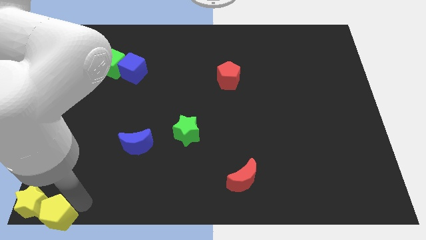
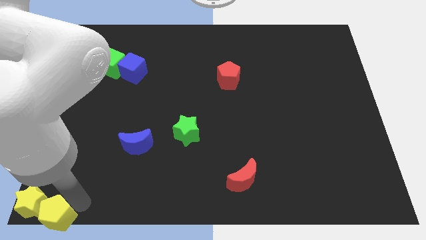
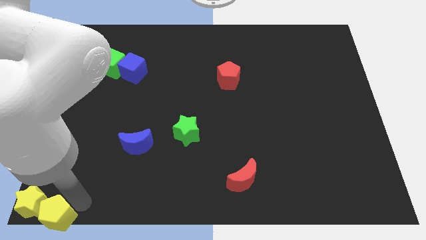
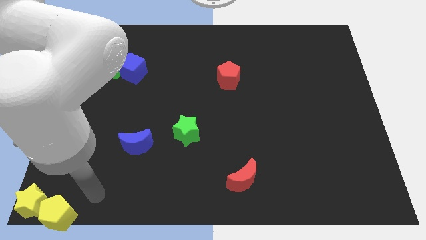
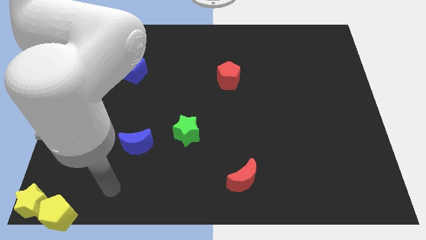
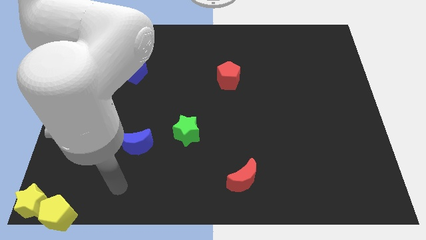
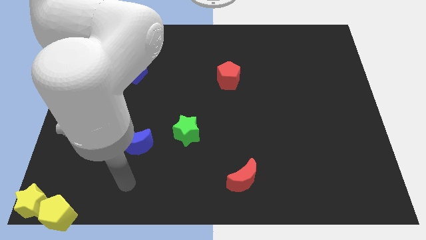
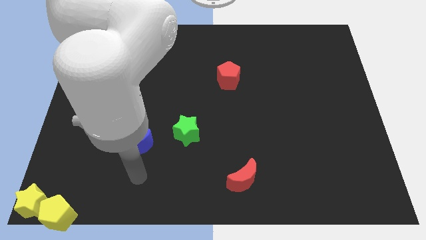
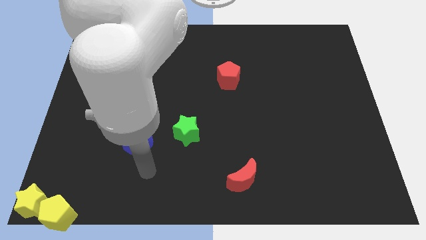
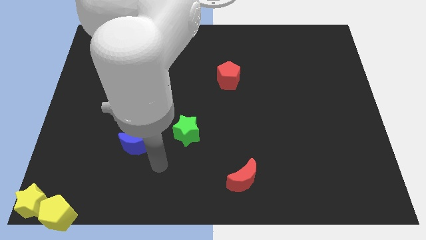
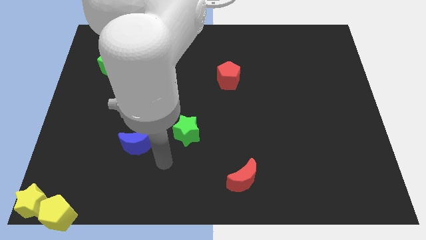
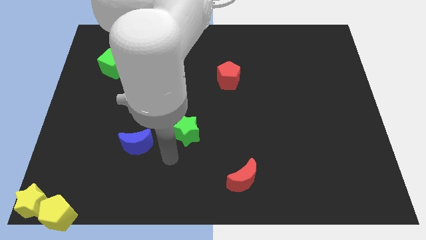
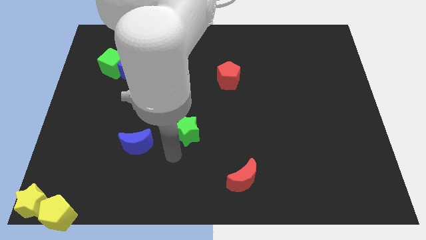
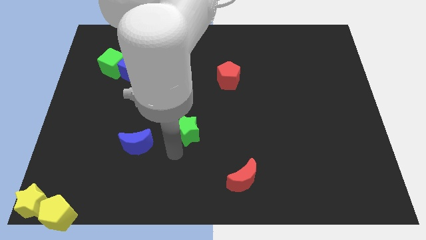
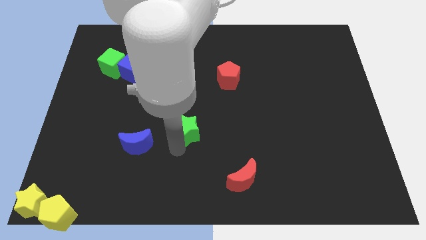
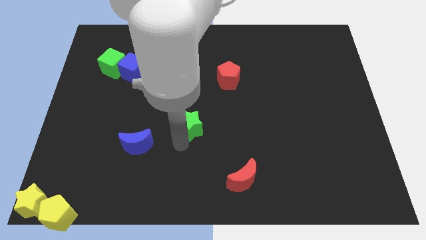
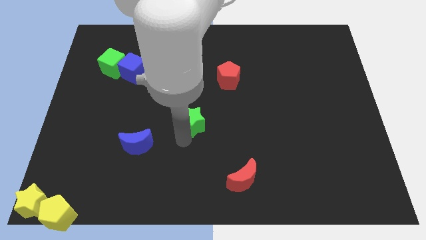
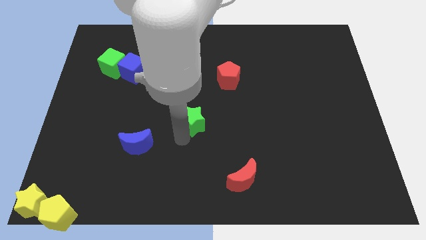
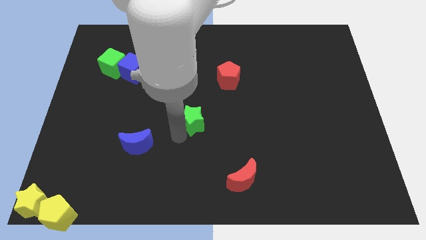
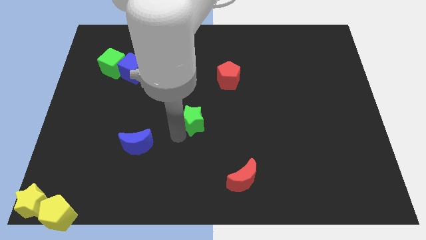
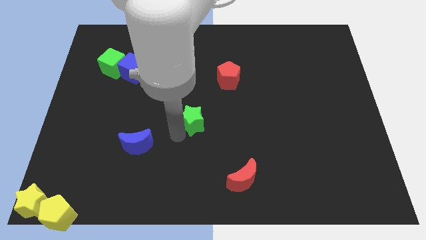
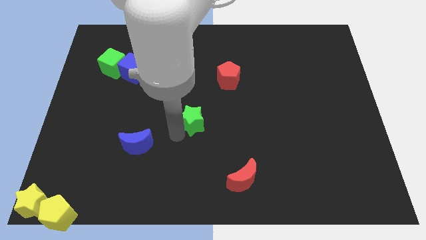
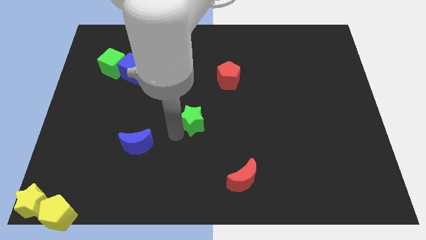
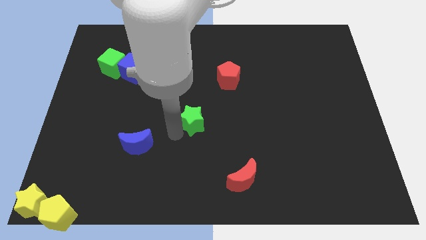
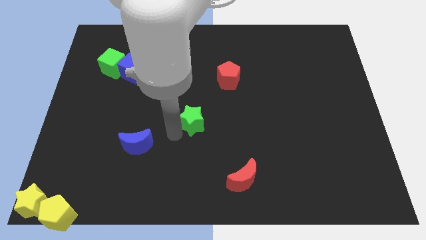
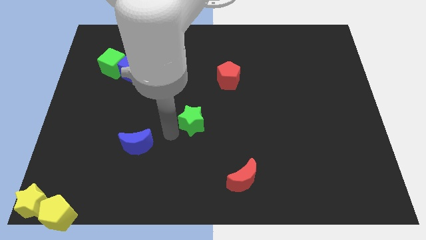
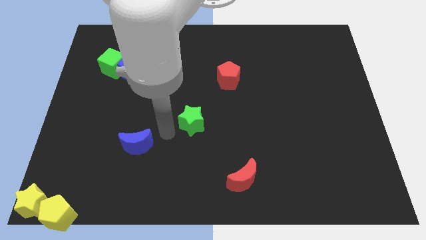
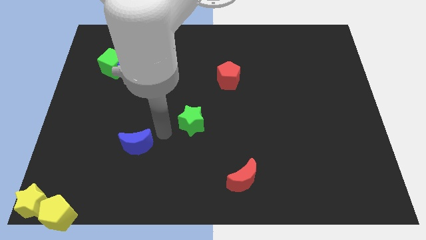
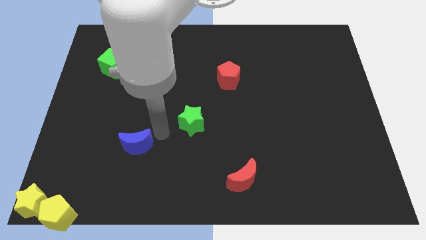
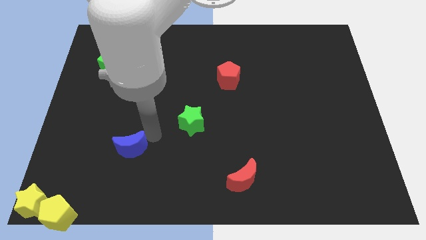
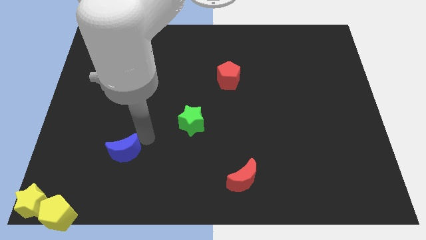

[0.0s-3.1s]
move the green star slightly upwards

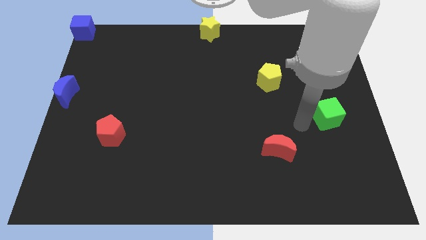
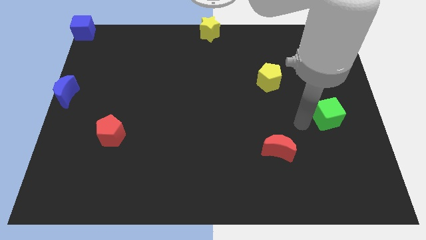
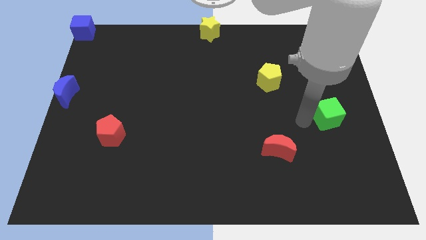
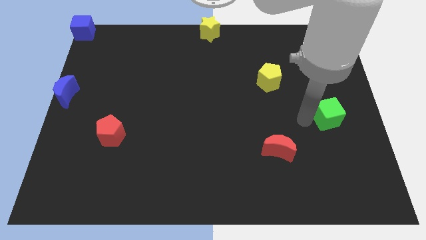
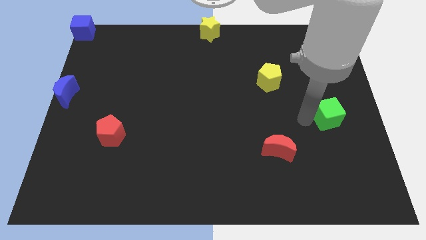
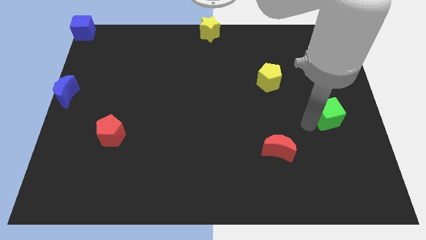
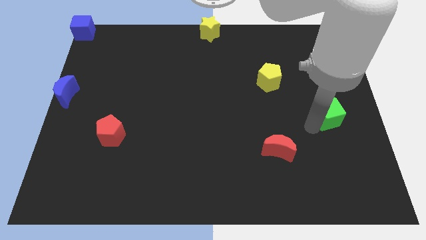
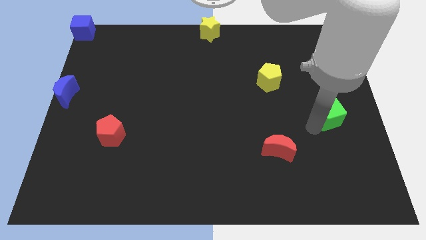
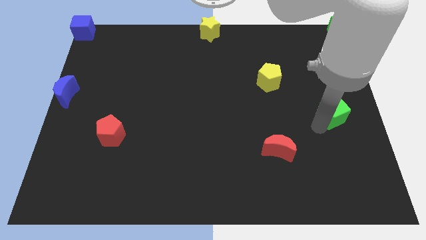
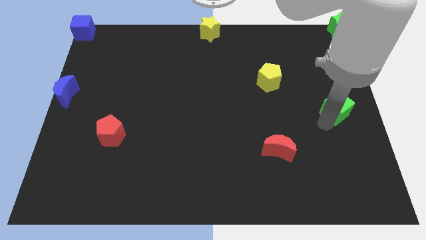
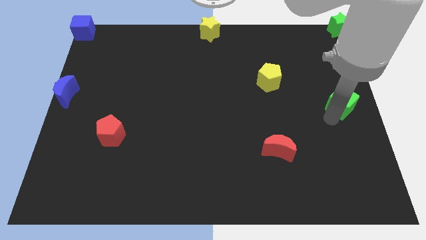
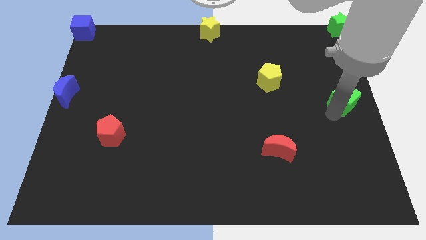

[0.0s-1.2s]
move the green cube to the right side of the board

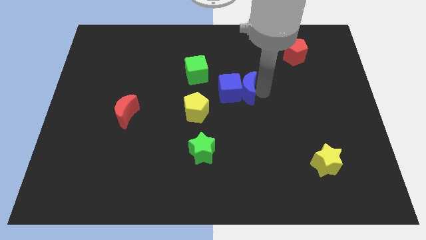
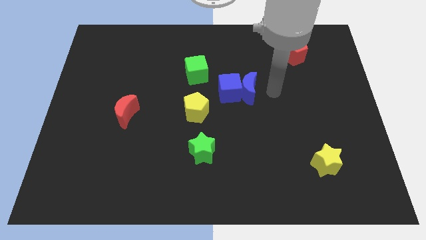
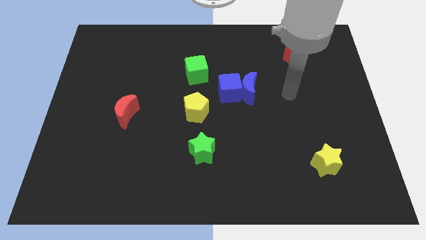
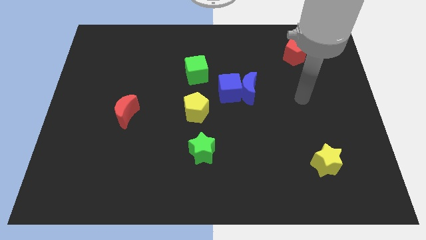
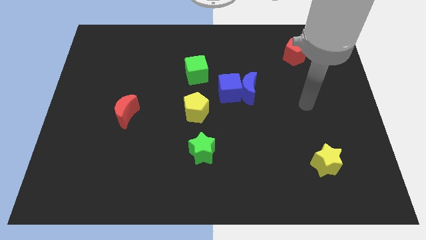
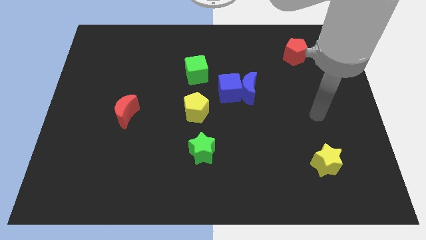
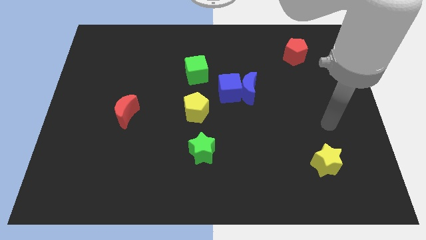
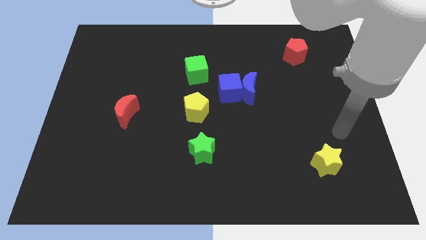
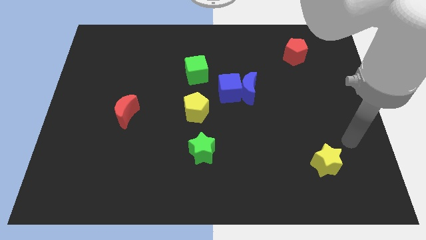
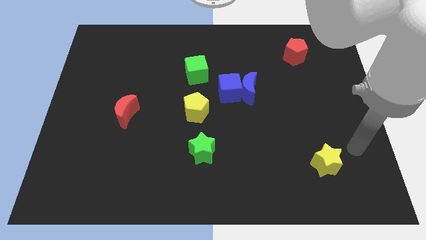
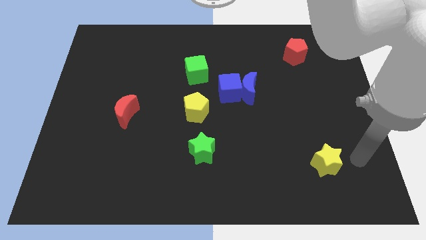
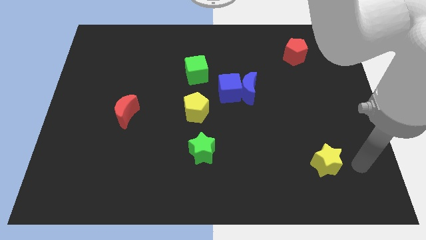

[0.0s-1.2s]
point your hand at the right side of the yellow star

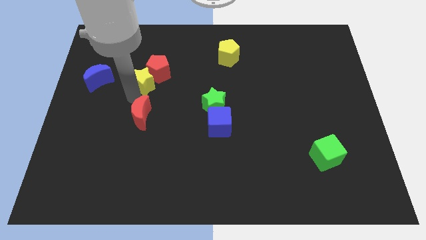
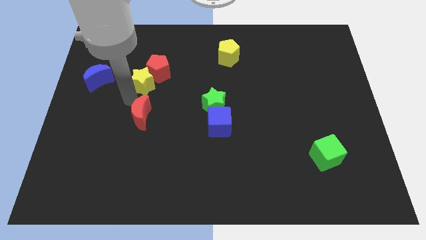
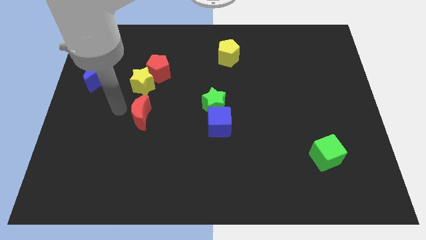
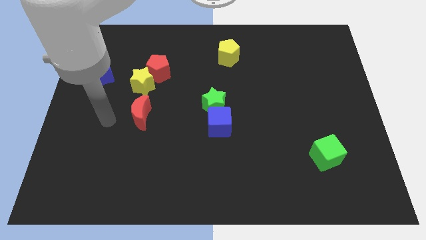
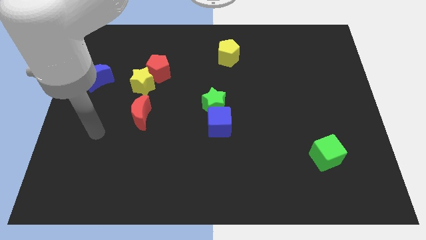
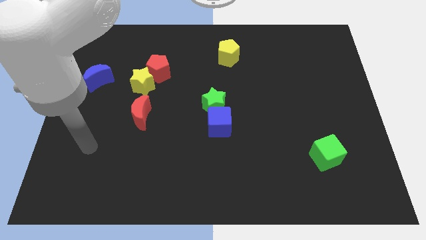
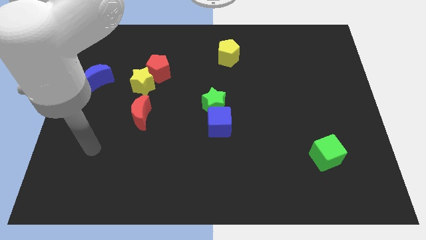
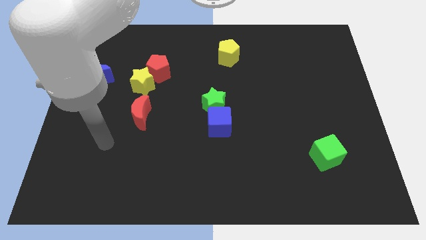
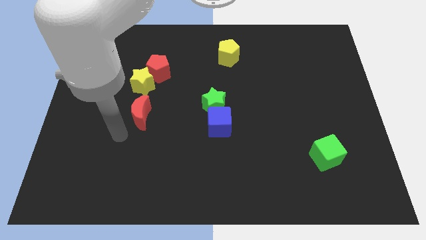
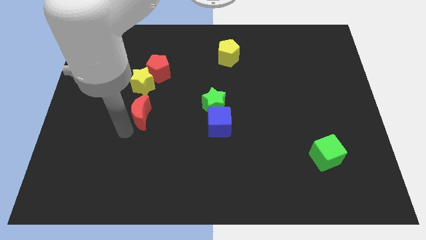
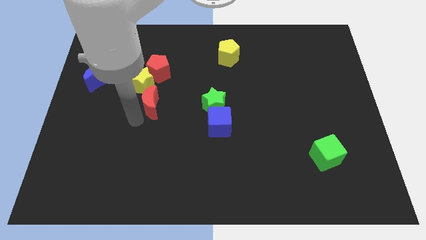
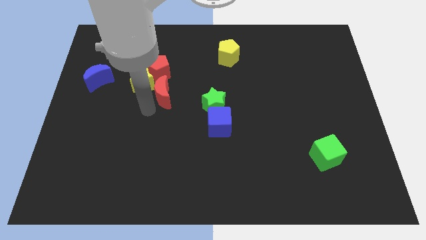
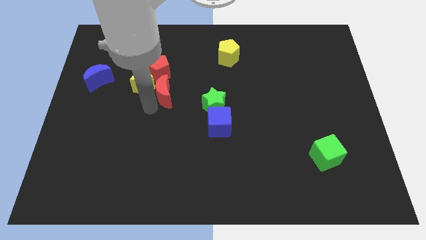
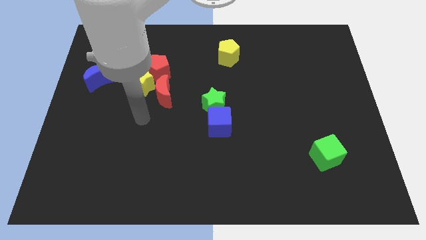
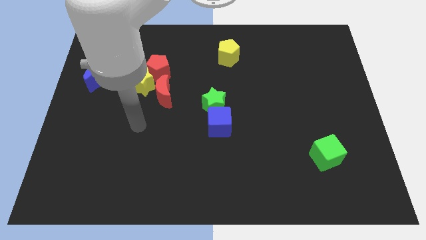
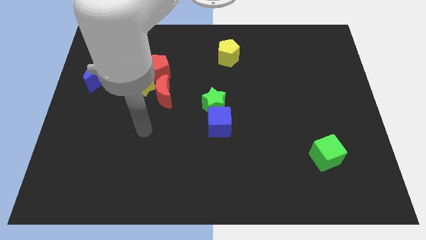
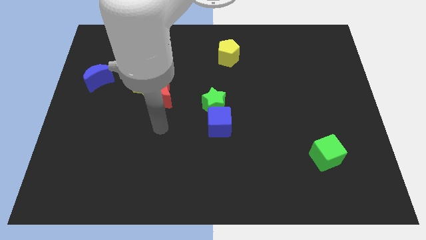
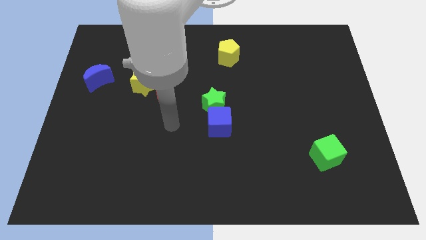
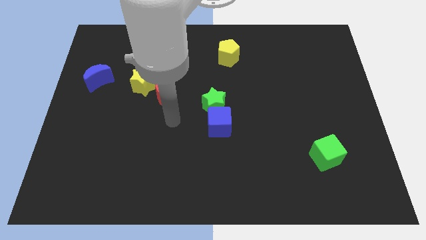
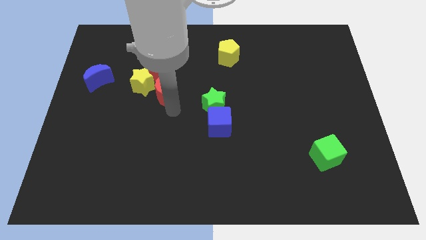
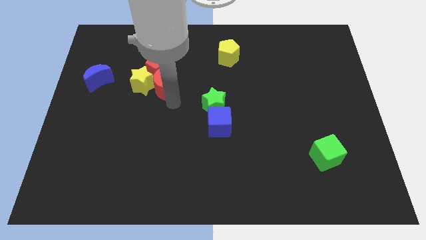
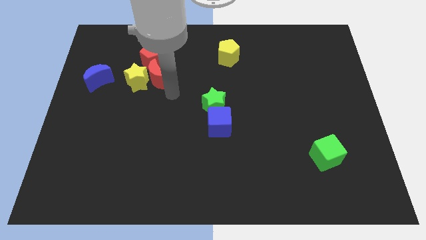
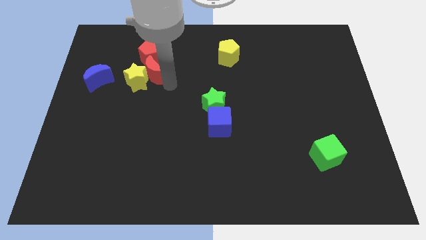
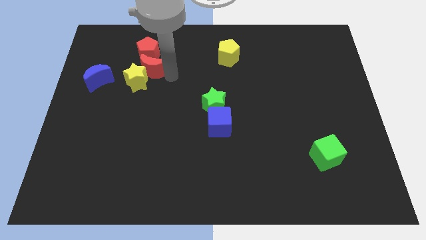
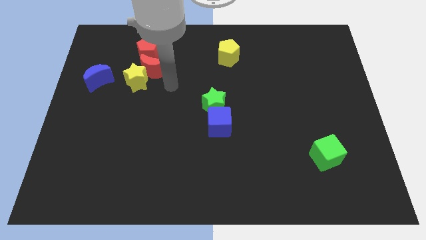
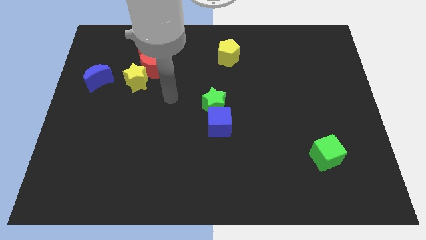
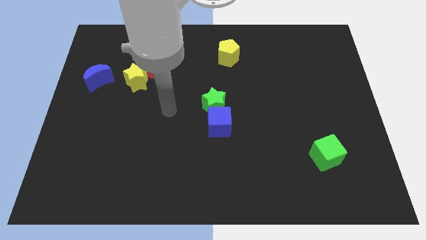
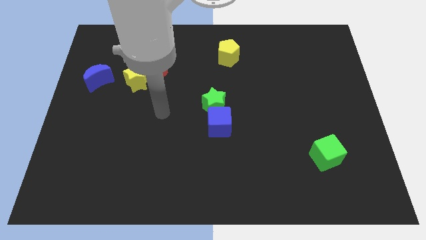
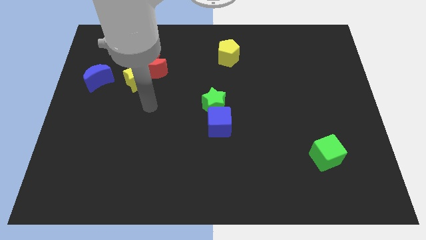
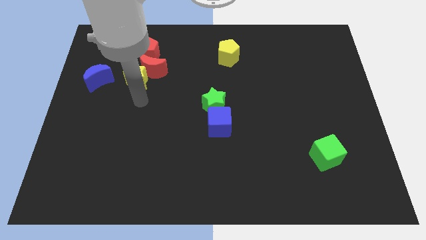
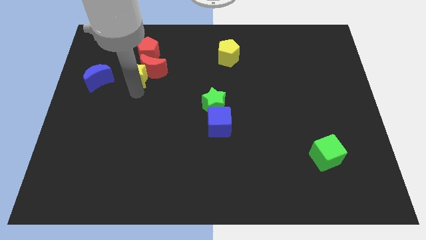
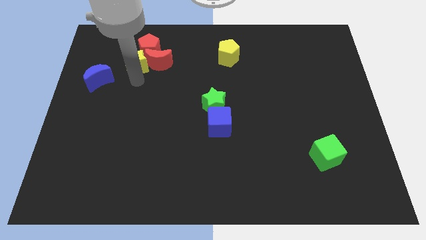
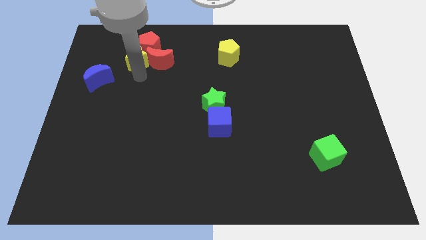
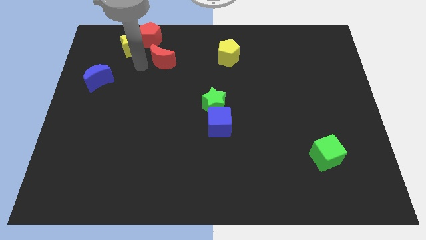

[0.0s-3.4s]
move the red crescent into the red pentagon

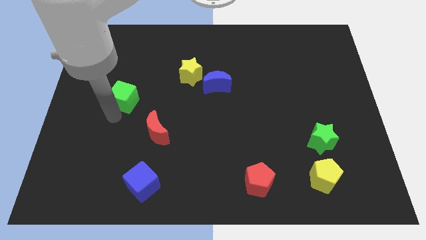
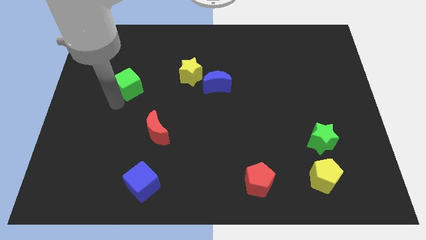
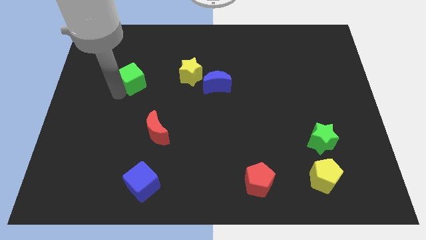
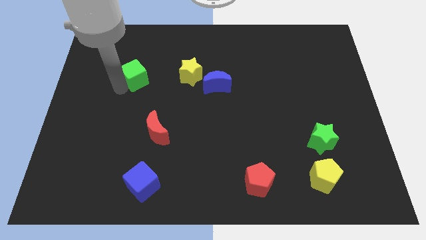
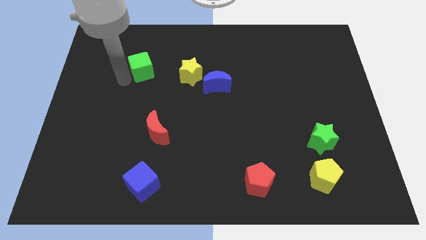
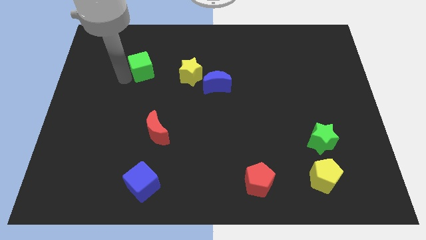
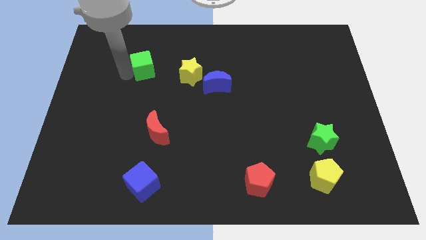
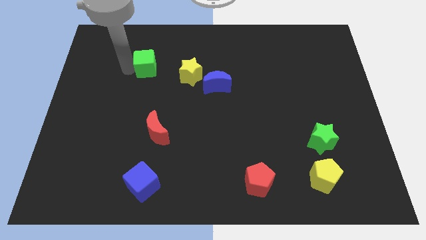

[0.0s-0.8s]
move the green cube left to the yellow star
